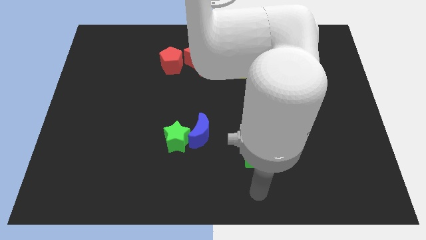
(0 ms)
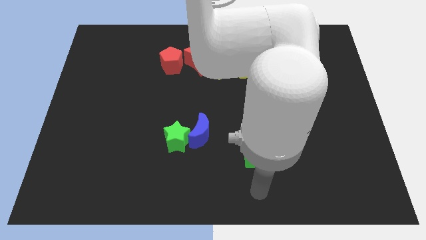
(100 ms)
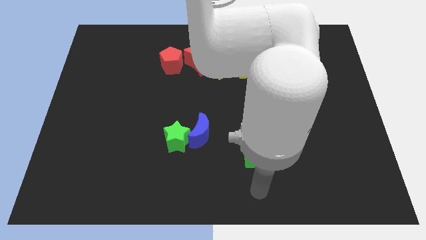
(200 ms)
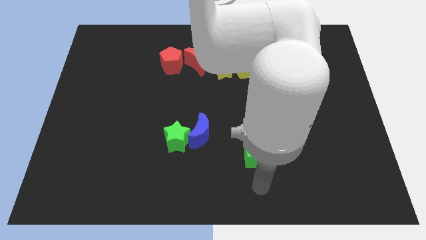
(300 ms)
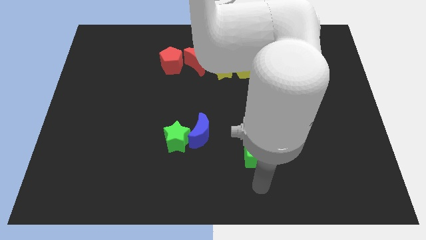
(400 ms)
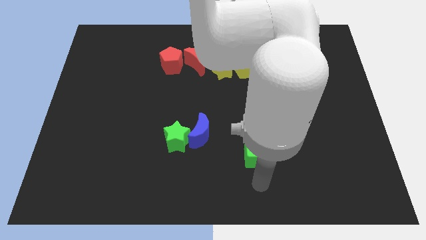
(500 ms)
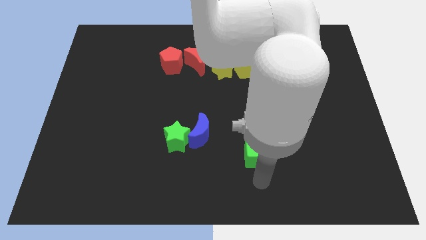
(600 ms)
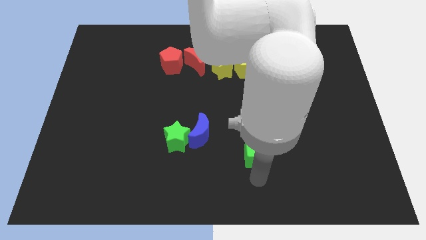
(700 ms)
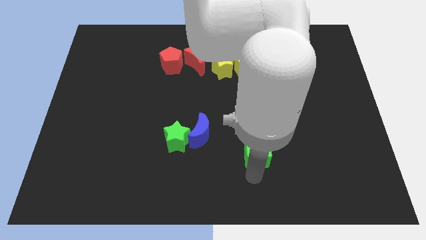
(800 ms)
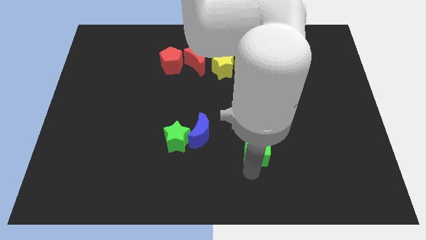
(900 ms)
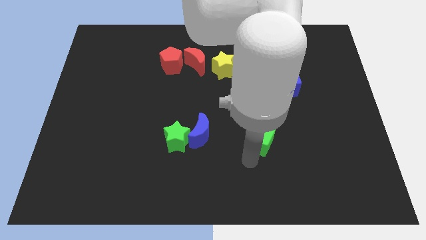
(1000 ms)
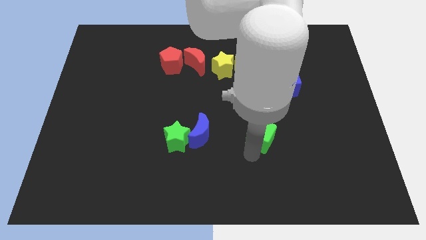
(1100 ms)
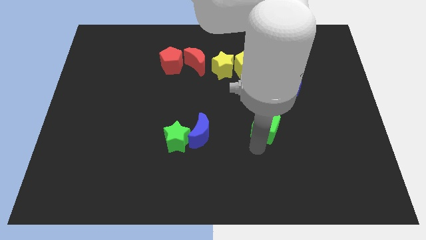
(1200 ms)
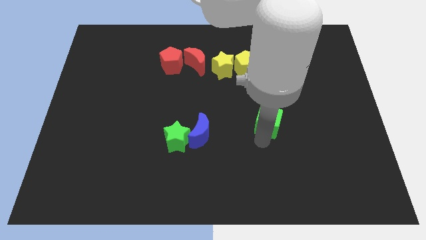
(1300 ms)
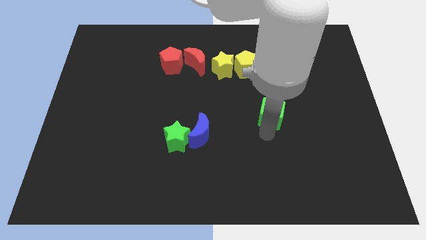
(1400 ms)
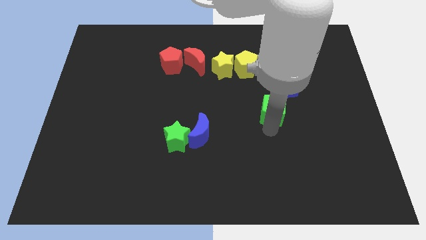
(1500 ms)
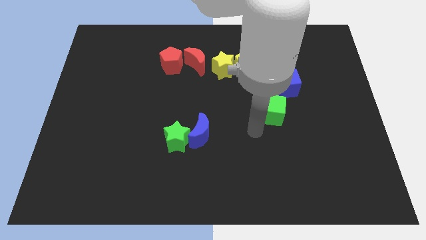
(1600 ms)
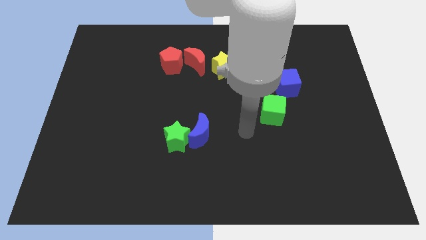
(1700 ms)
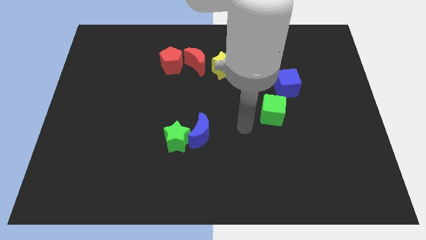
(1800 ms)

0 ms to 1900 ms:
push green cube into blue cube

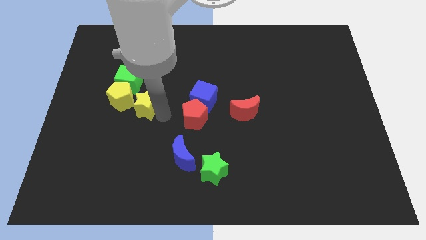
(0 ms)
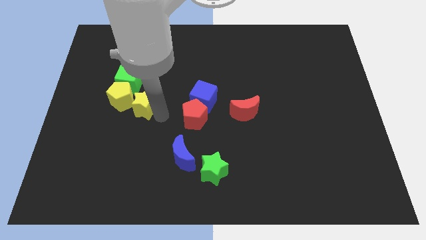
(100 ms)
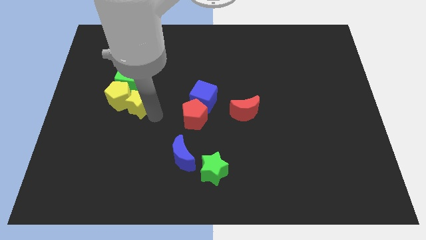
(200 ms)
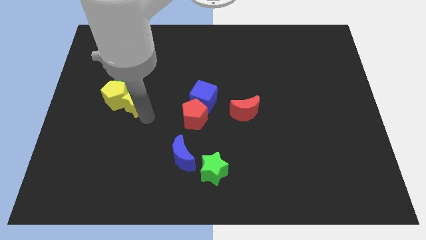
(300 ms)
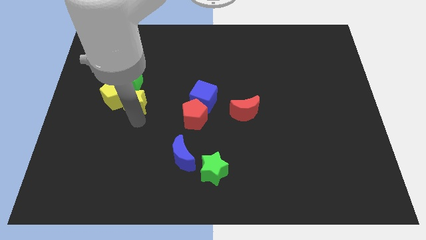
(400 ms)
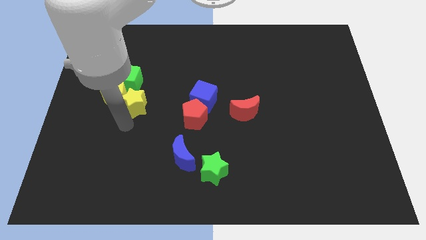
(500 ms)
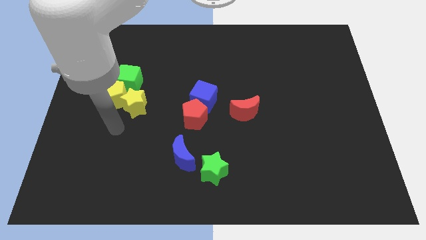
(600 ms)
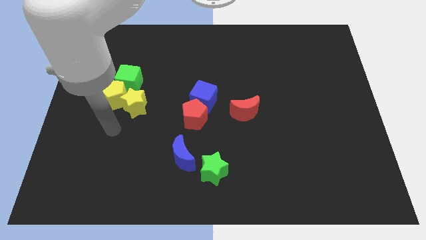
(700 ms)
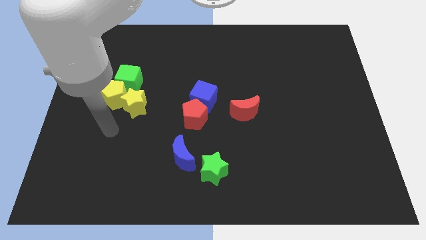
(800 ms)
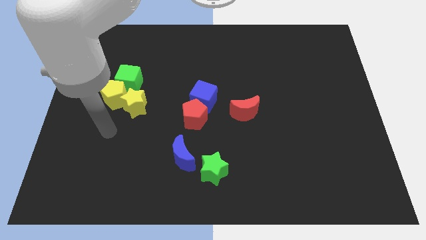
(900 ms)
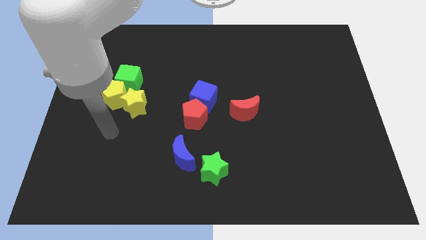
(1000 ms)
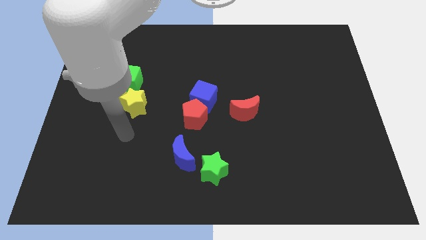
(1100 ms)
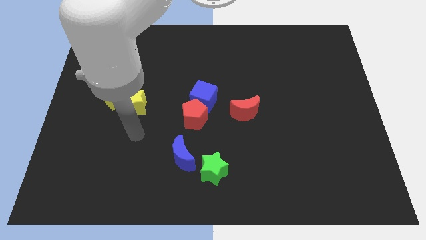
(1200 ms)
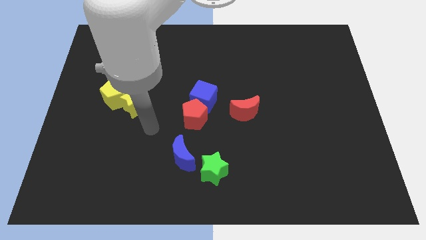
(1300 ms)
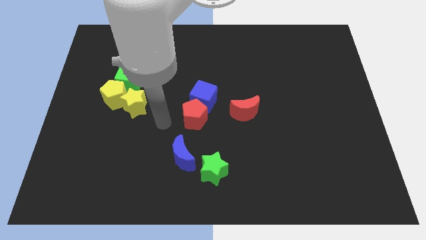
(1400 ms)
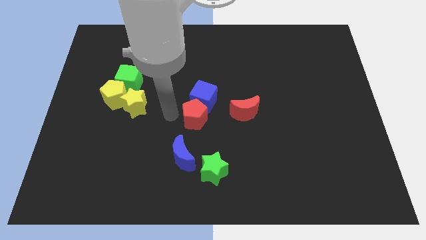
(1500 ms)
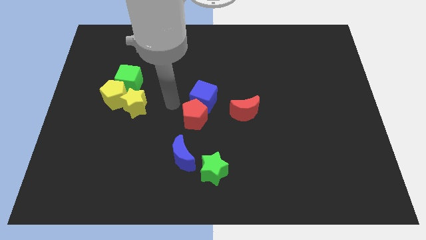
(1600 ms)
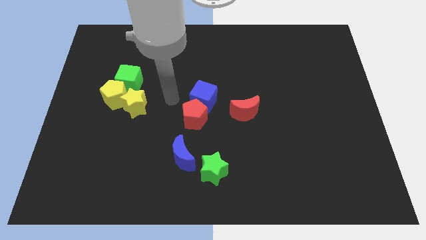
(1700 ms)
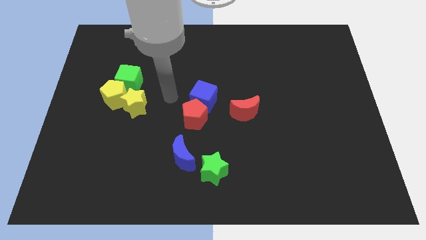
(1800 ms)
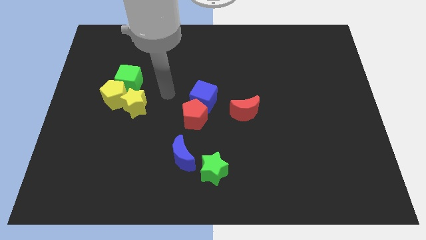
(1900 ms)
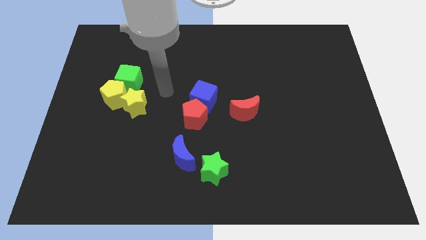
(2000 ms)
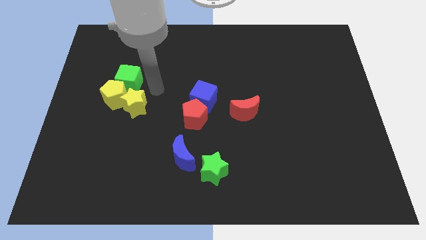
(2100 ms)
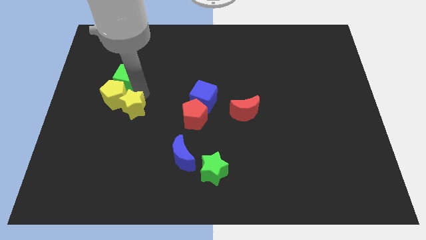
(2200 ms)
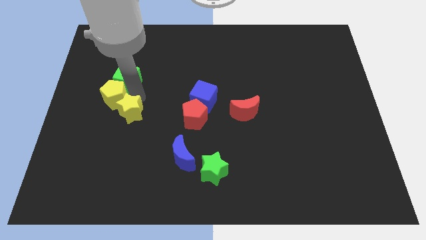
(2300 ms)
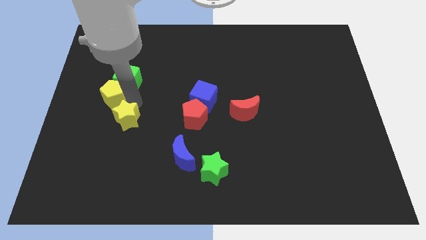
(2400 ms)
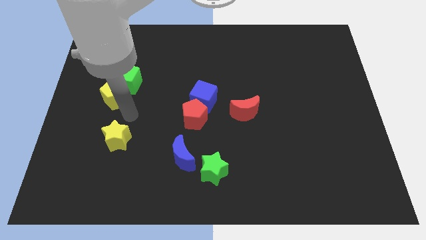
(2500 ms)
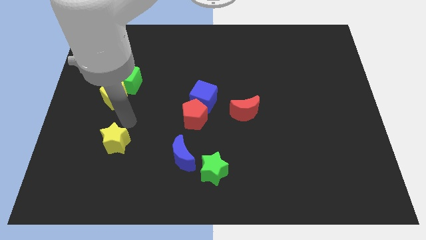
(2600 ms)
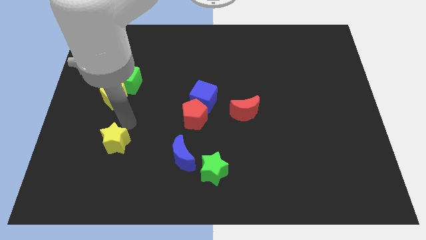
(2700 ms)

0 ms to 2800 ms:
separate the yellow star from the yellow pentagon

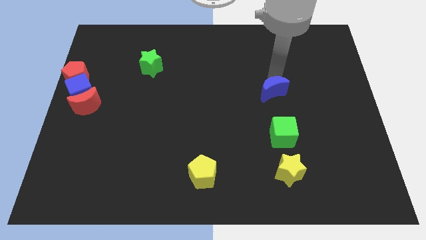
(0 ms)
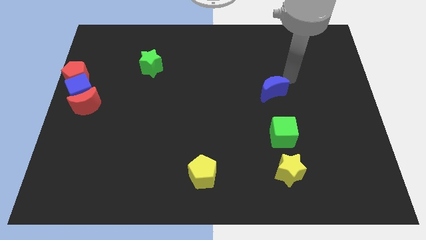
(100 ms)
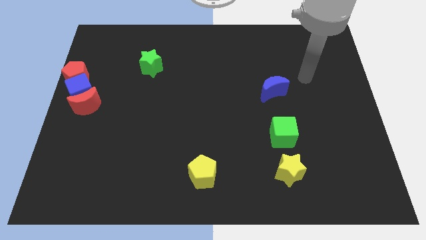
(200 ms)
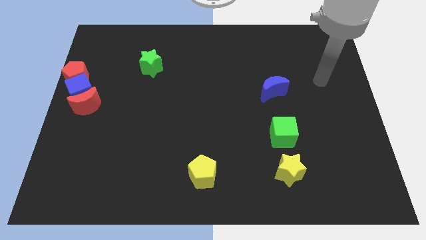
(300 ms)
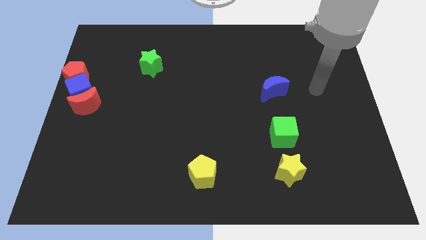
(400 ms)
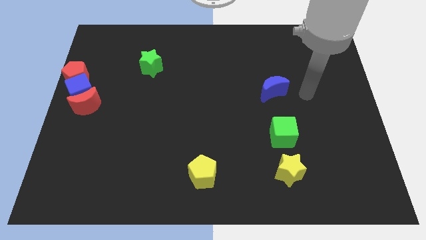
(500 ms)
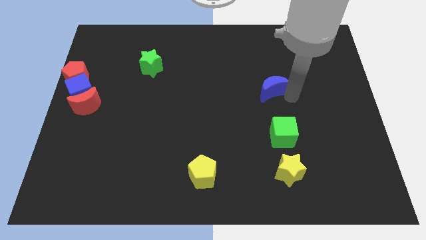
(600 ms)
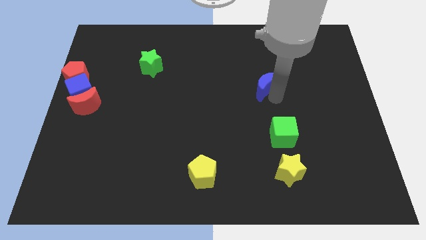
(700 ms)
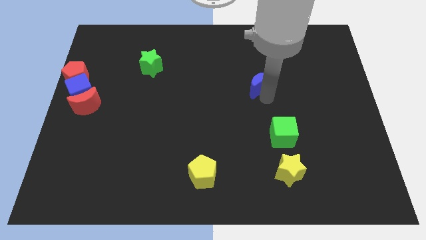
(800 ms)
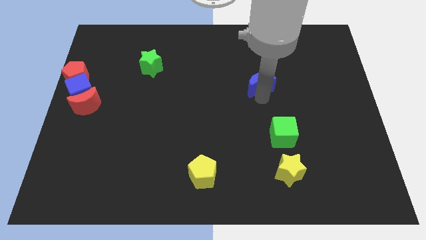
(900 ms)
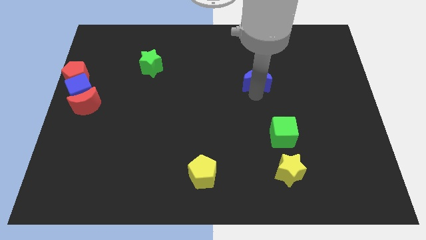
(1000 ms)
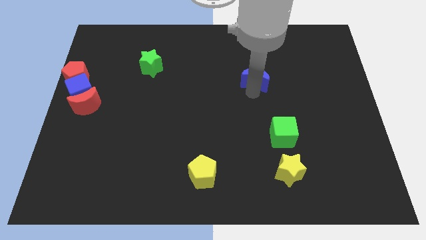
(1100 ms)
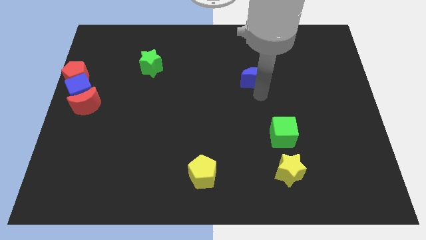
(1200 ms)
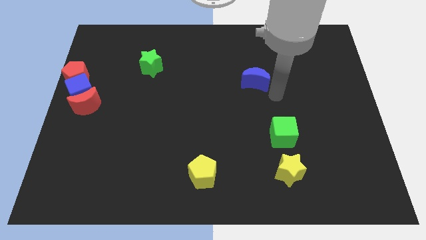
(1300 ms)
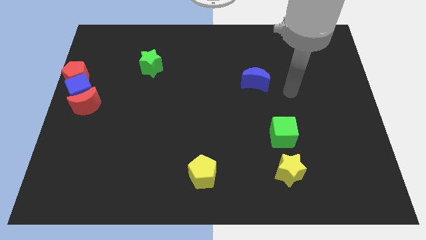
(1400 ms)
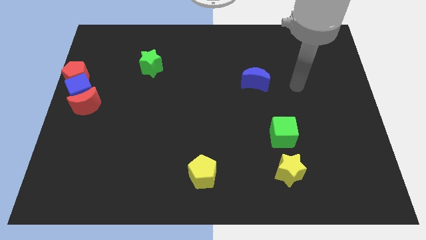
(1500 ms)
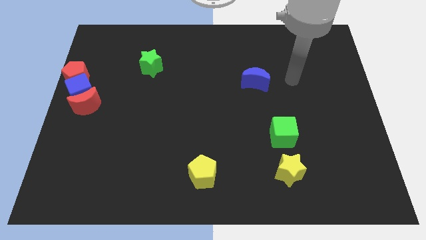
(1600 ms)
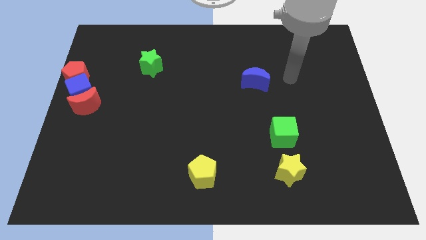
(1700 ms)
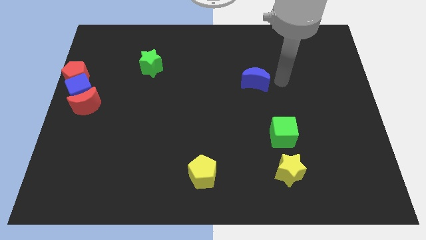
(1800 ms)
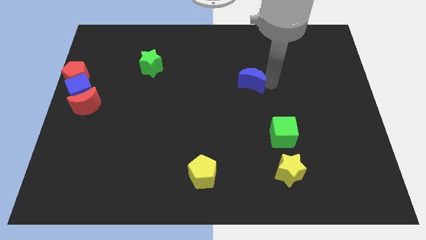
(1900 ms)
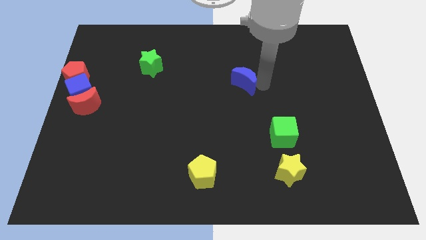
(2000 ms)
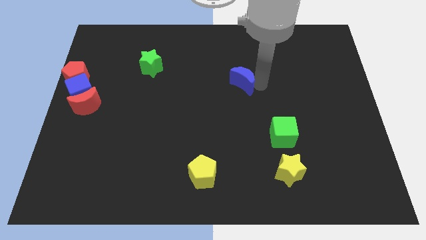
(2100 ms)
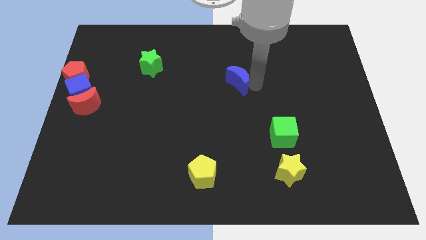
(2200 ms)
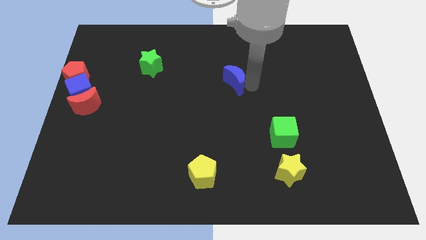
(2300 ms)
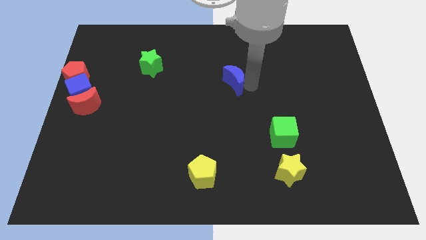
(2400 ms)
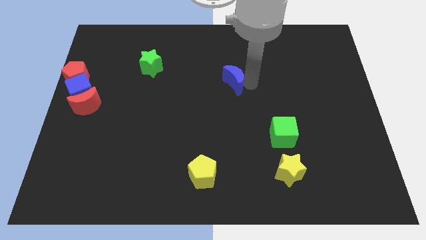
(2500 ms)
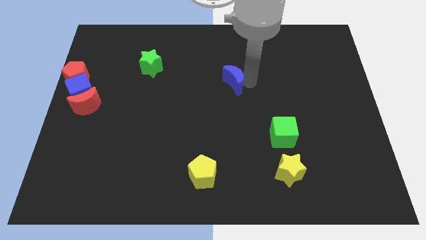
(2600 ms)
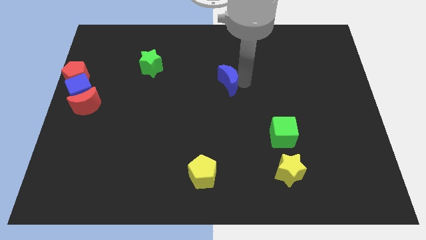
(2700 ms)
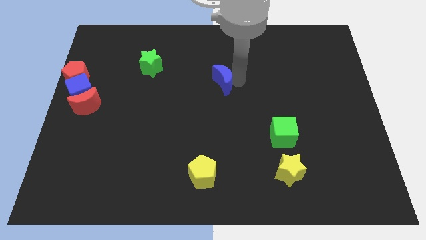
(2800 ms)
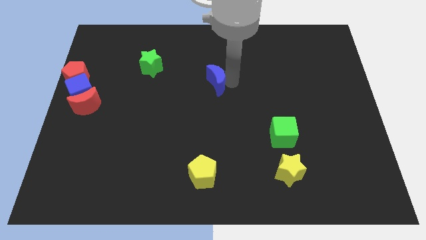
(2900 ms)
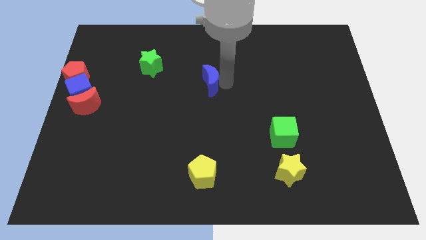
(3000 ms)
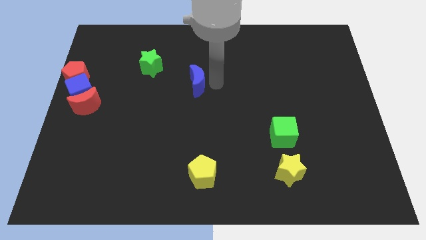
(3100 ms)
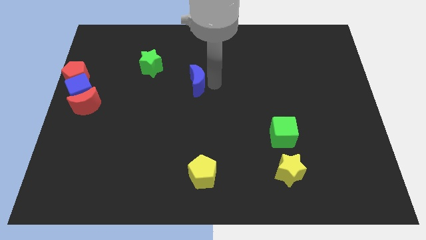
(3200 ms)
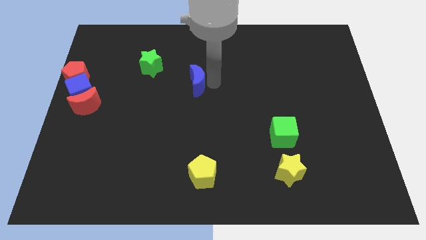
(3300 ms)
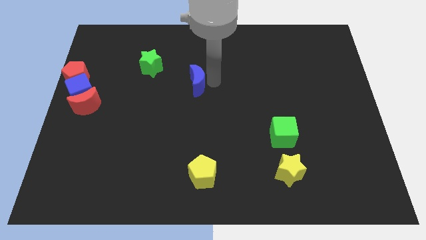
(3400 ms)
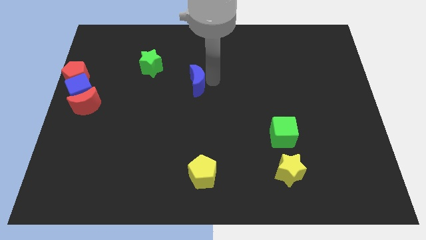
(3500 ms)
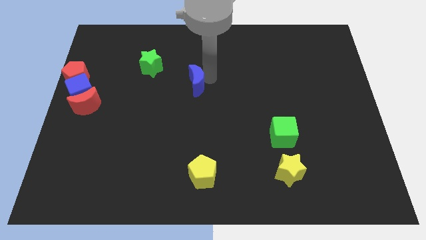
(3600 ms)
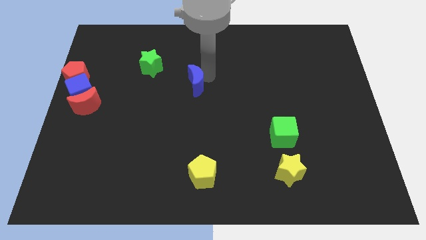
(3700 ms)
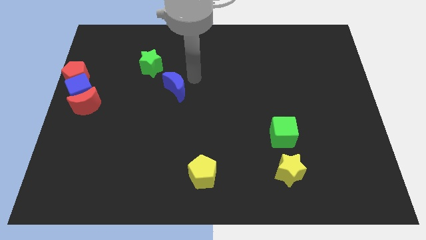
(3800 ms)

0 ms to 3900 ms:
push the blue moon towards the left side of the board

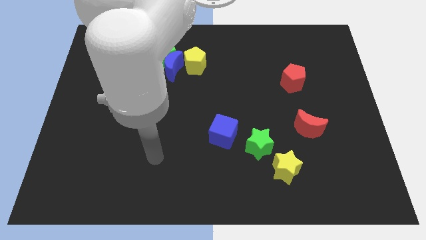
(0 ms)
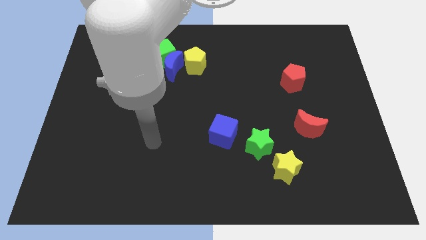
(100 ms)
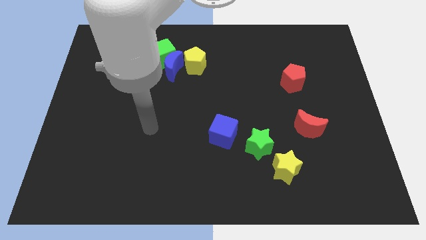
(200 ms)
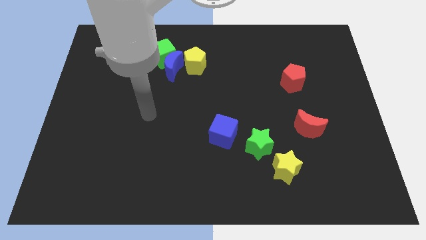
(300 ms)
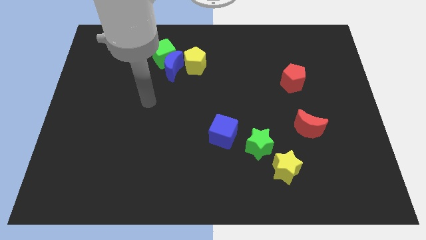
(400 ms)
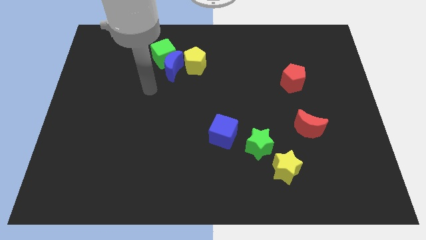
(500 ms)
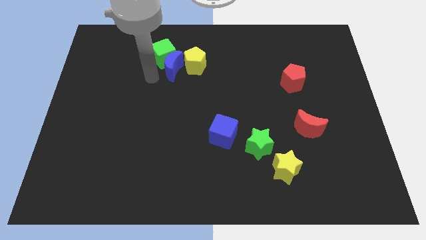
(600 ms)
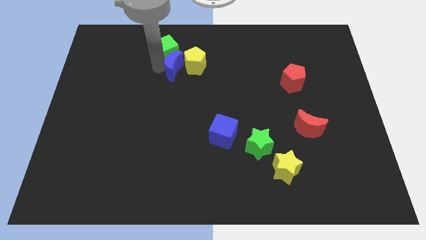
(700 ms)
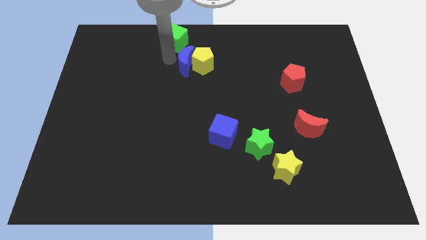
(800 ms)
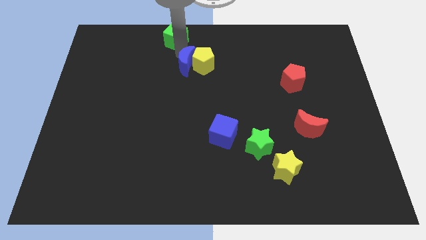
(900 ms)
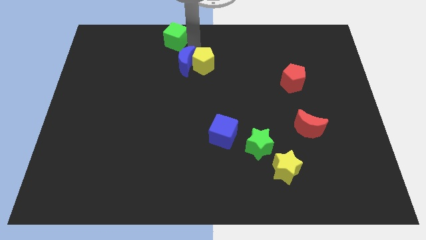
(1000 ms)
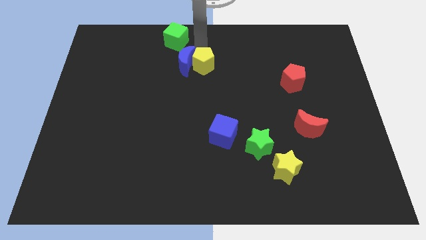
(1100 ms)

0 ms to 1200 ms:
move green cube to the center top
